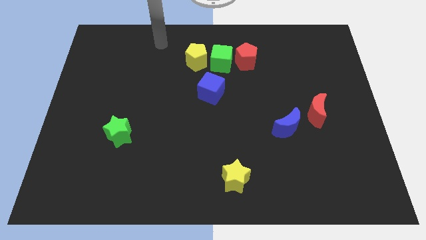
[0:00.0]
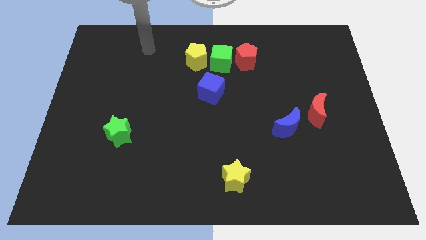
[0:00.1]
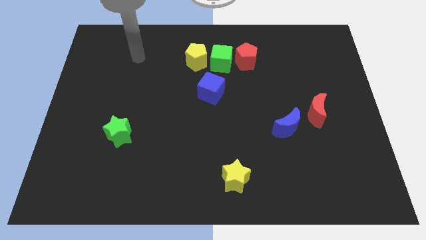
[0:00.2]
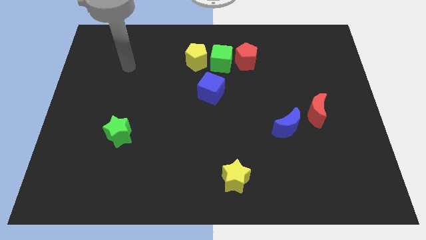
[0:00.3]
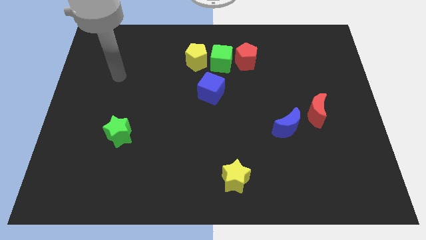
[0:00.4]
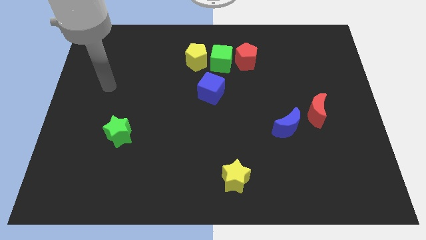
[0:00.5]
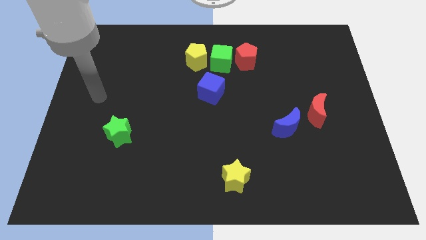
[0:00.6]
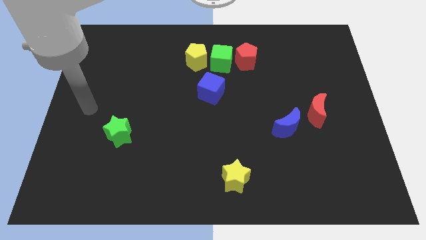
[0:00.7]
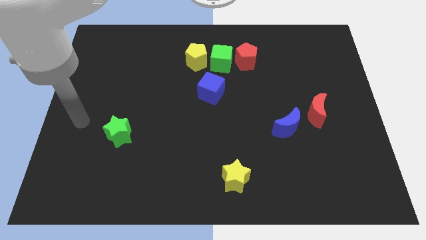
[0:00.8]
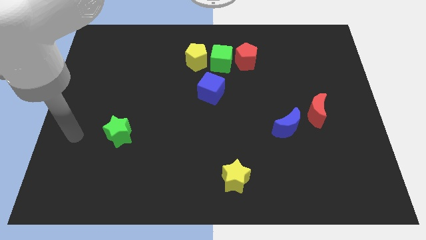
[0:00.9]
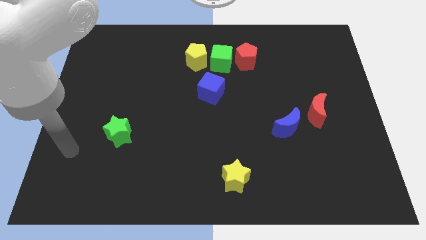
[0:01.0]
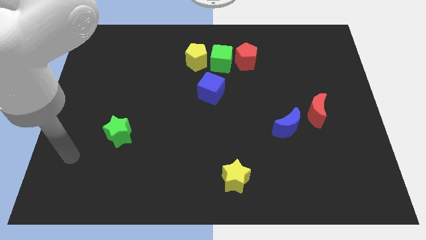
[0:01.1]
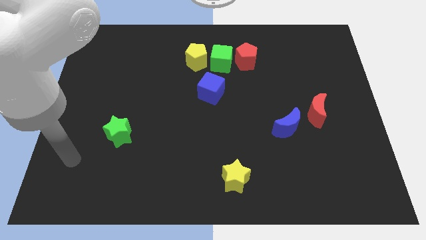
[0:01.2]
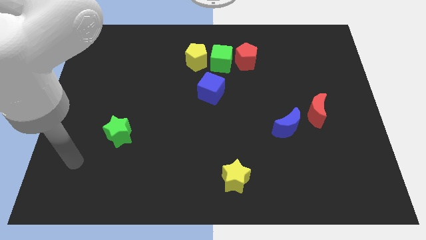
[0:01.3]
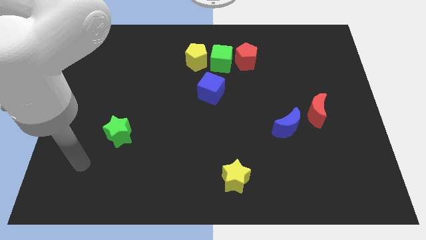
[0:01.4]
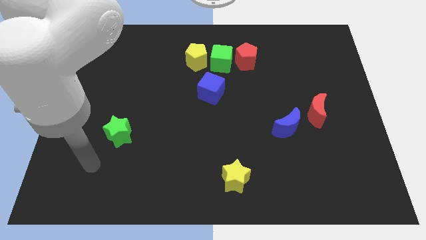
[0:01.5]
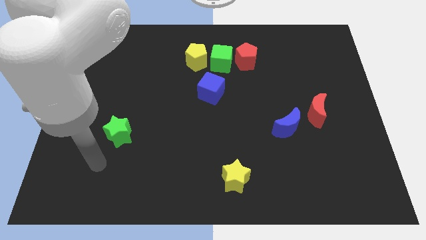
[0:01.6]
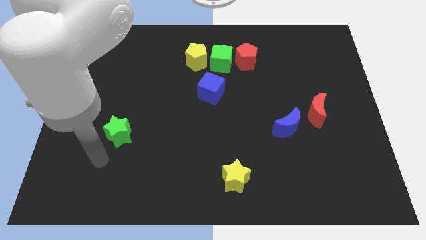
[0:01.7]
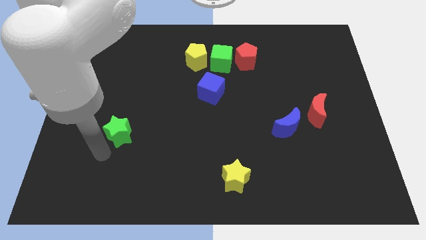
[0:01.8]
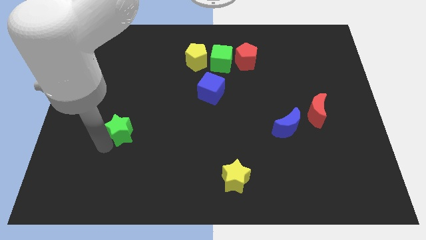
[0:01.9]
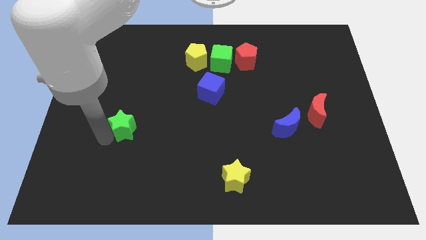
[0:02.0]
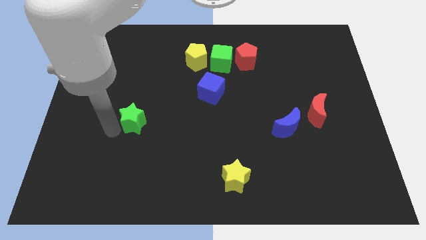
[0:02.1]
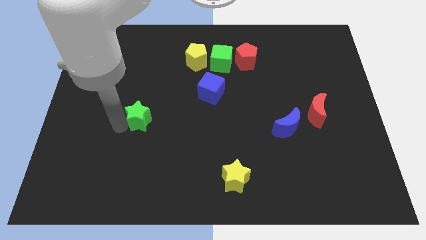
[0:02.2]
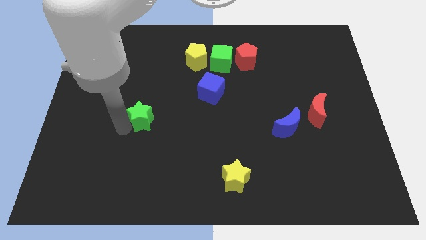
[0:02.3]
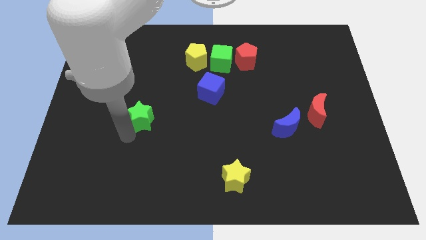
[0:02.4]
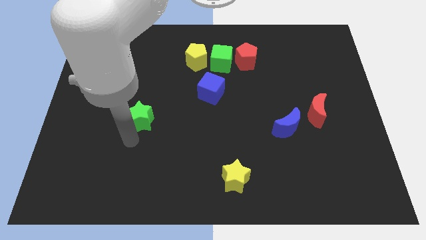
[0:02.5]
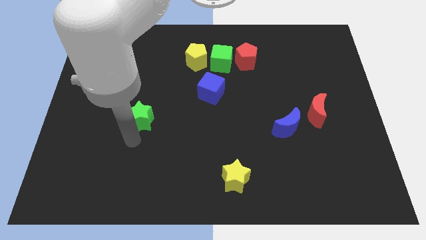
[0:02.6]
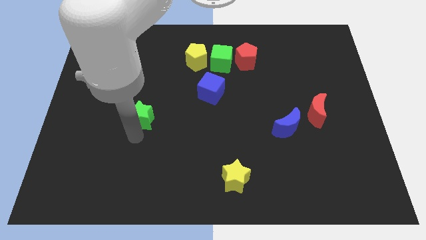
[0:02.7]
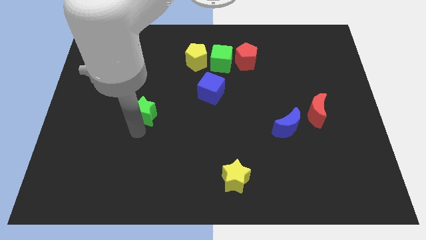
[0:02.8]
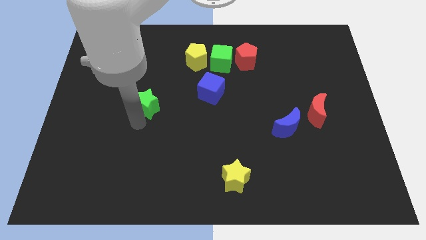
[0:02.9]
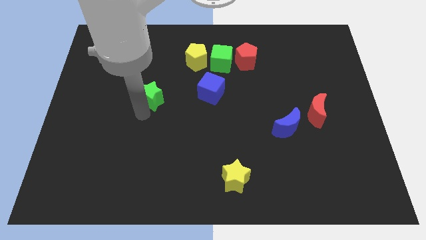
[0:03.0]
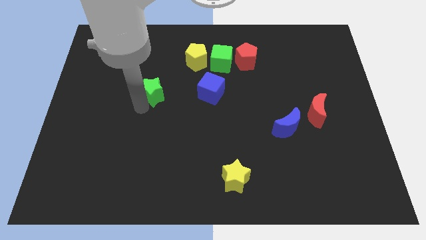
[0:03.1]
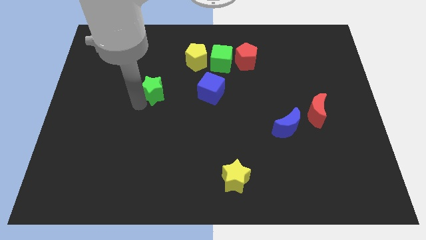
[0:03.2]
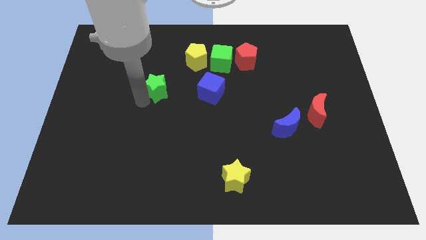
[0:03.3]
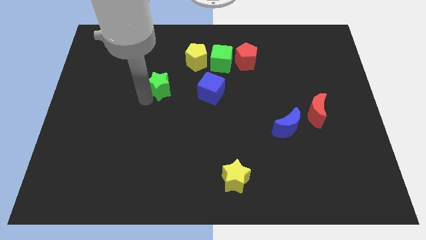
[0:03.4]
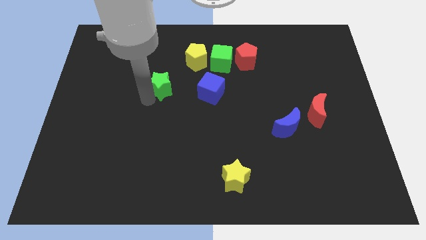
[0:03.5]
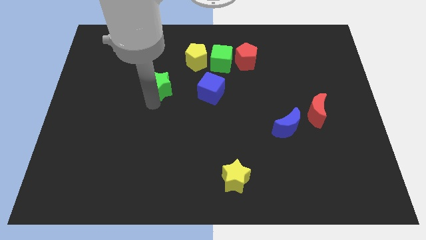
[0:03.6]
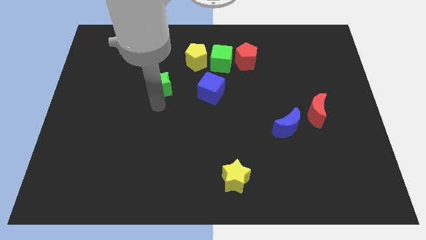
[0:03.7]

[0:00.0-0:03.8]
move the green star to the horizontal left of the blue cube

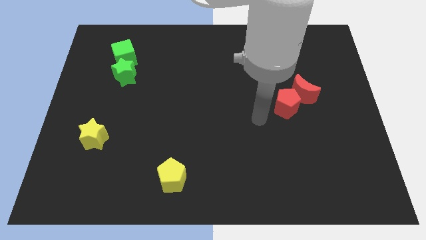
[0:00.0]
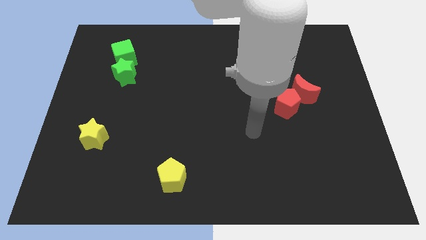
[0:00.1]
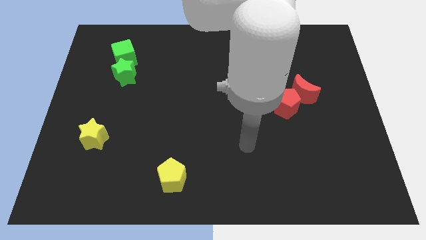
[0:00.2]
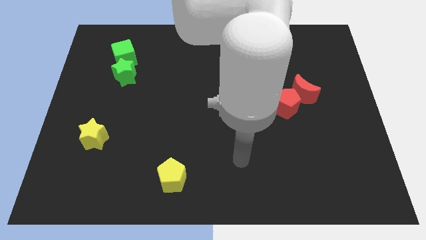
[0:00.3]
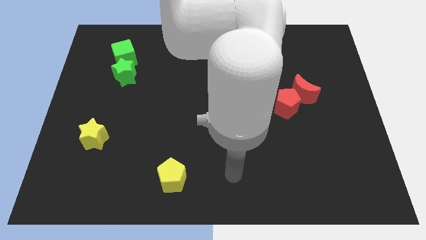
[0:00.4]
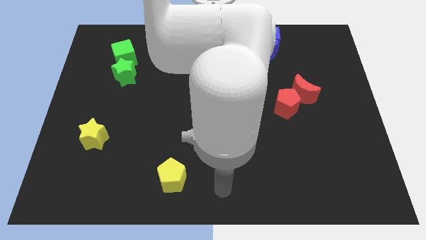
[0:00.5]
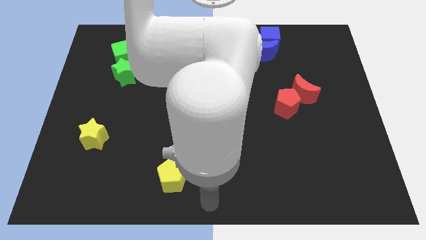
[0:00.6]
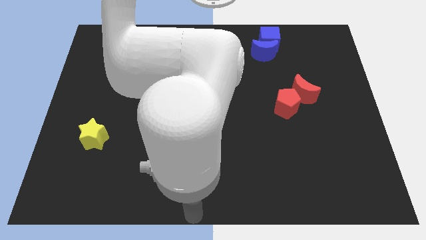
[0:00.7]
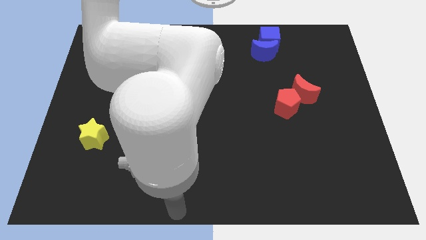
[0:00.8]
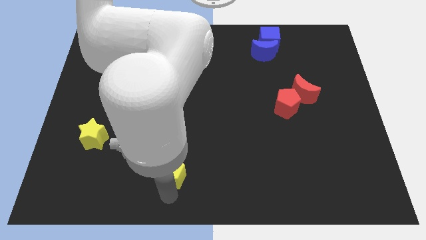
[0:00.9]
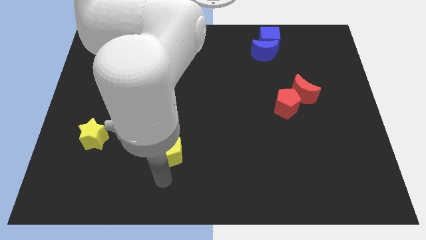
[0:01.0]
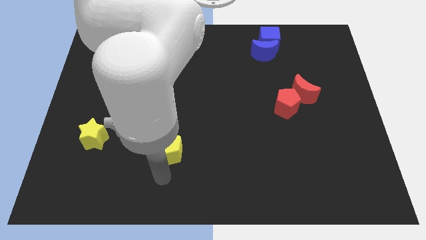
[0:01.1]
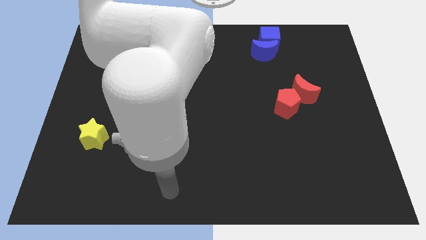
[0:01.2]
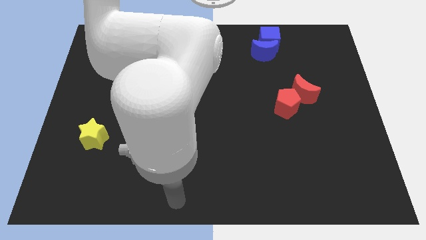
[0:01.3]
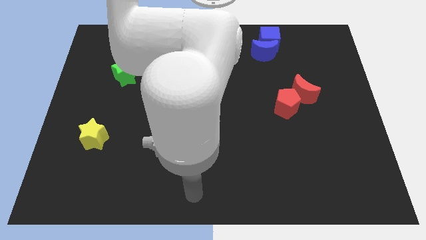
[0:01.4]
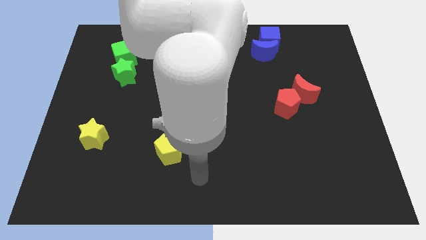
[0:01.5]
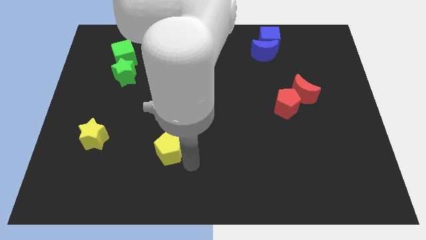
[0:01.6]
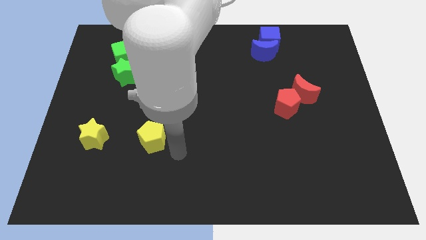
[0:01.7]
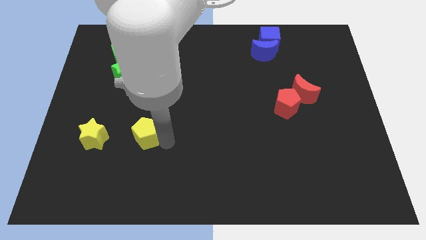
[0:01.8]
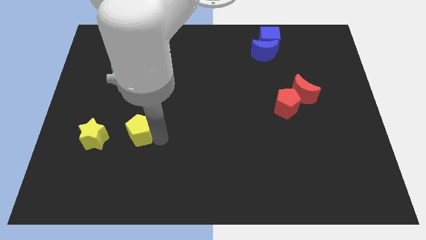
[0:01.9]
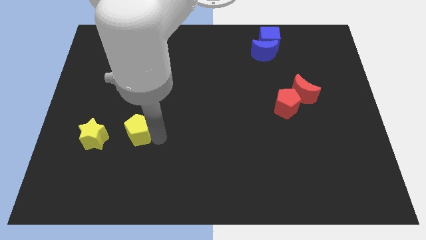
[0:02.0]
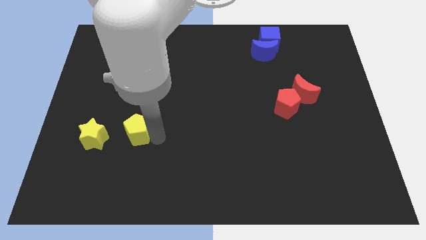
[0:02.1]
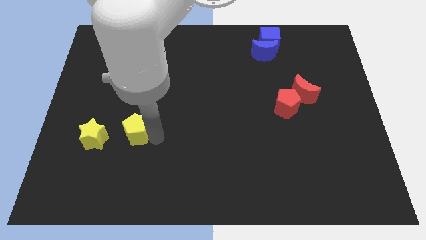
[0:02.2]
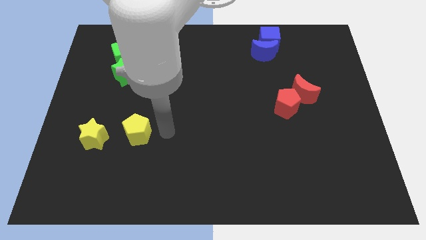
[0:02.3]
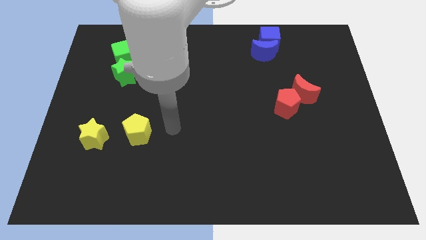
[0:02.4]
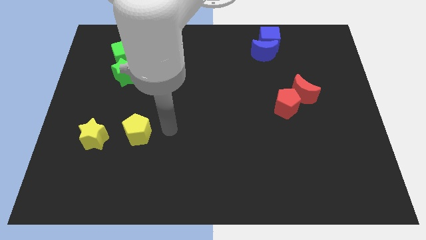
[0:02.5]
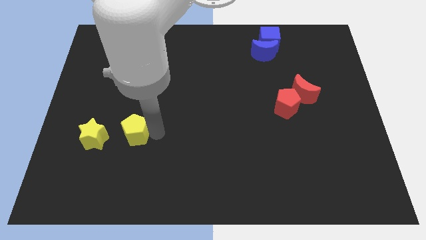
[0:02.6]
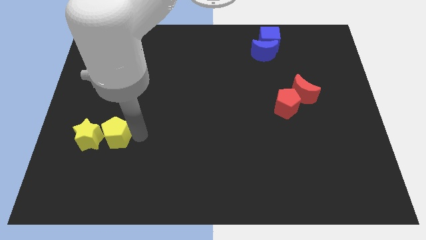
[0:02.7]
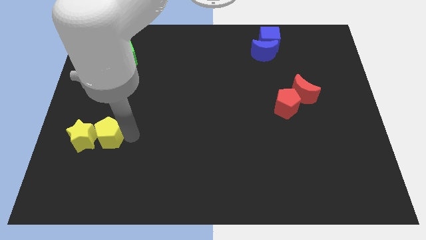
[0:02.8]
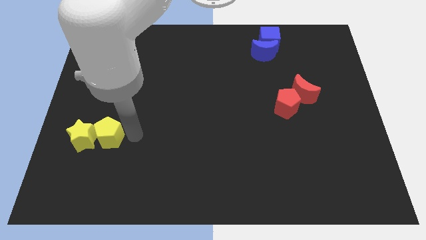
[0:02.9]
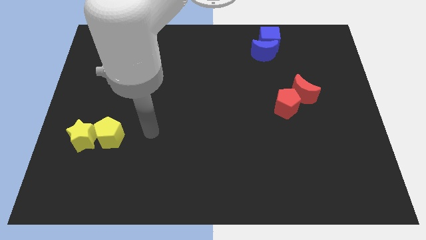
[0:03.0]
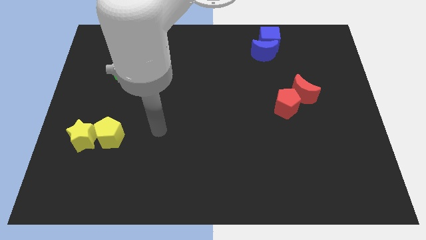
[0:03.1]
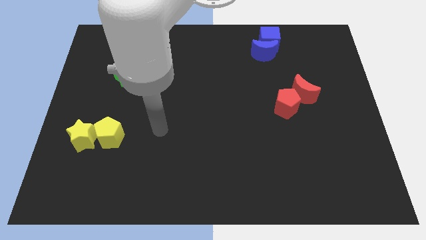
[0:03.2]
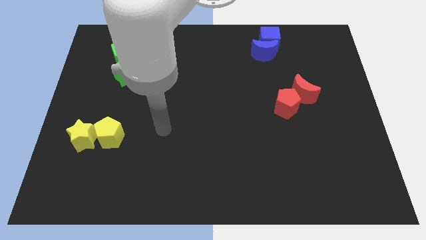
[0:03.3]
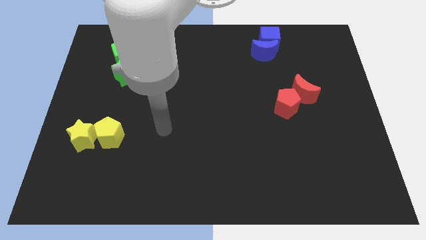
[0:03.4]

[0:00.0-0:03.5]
push the yellow pentagon into the yellow star

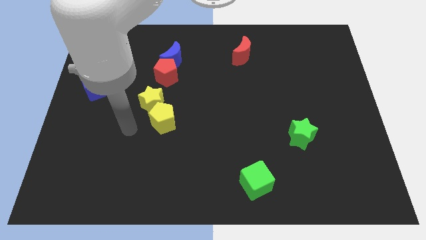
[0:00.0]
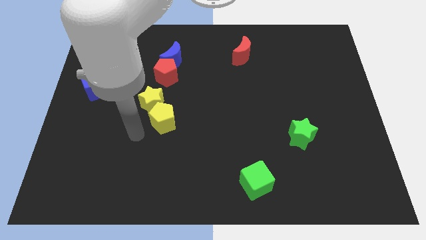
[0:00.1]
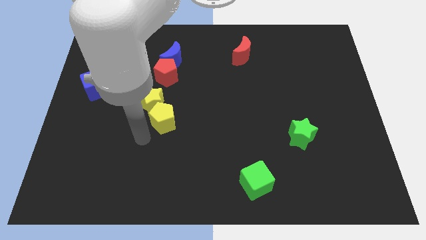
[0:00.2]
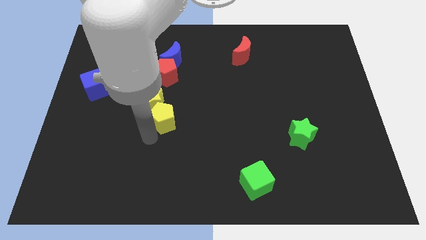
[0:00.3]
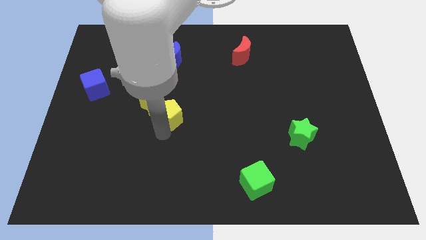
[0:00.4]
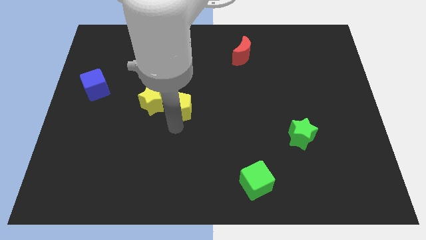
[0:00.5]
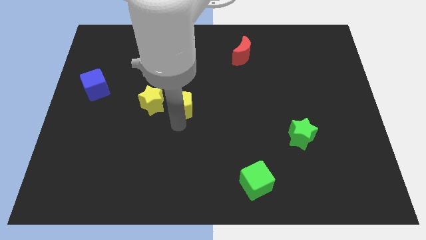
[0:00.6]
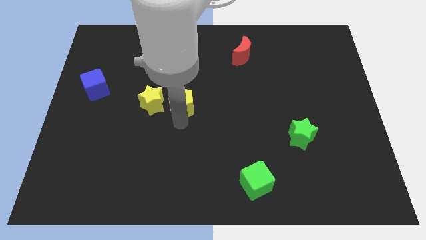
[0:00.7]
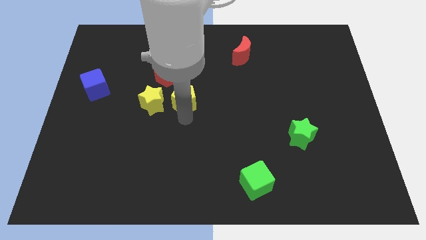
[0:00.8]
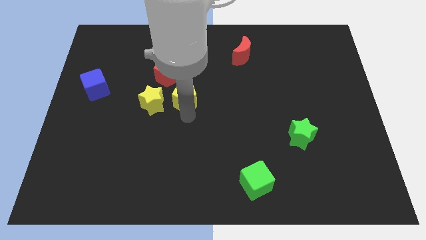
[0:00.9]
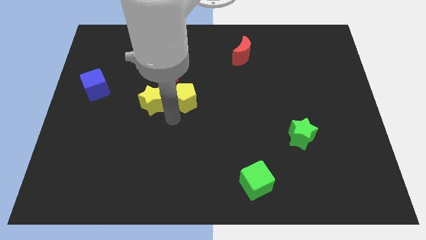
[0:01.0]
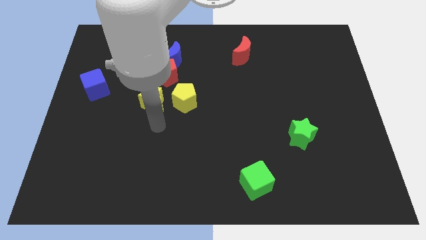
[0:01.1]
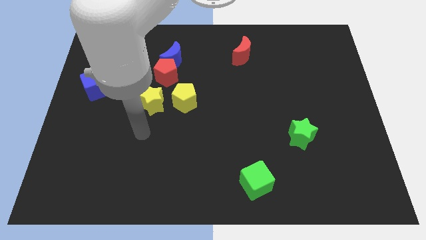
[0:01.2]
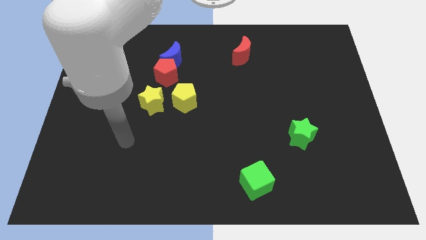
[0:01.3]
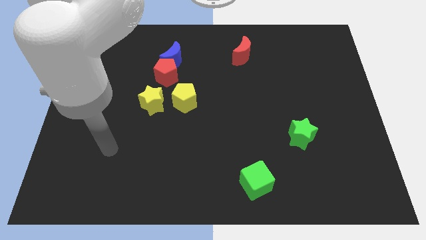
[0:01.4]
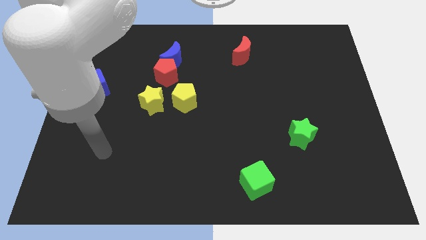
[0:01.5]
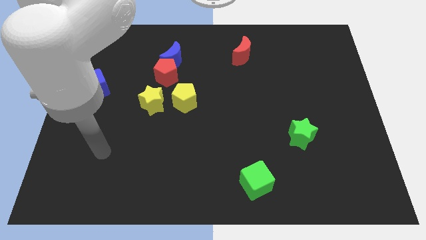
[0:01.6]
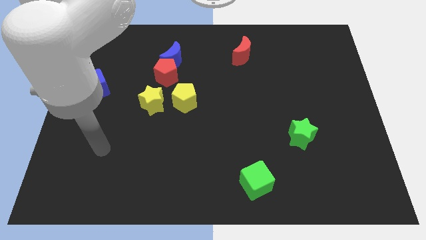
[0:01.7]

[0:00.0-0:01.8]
move the yellow pentagon to the right of the yellow star
